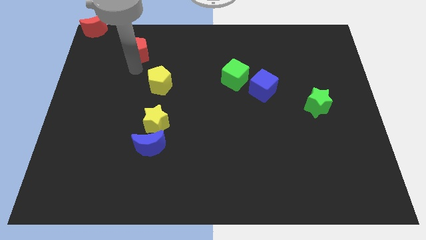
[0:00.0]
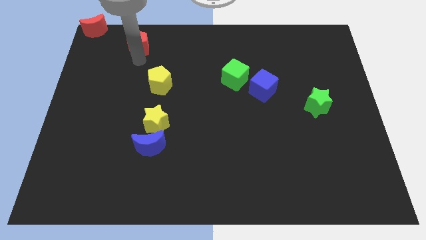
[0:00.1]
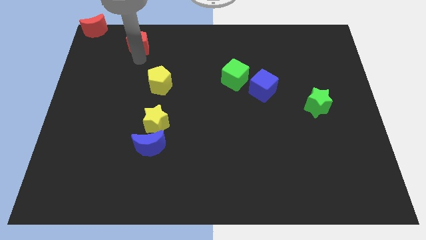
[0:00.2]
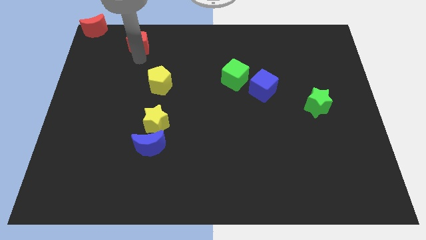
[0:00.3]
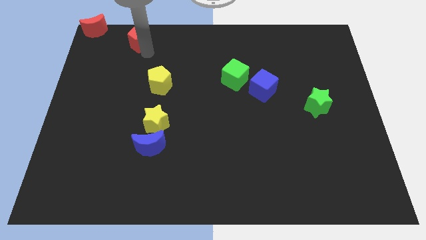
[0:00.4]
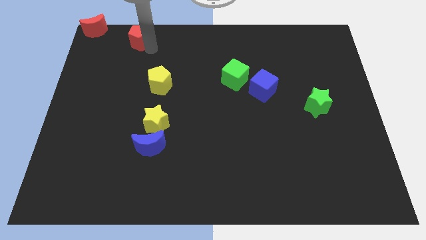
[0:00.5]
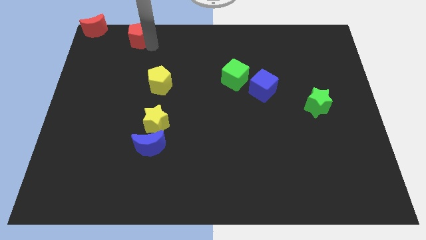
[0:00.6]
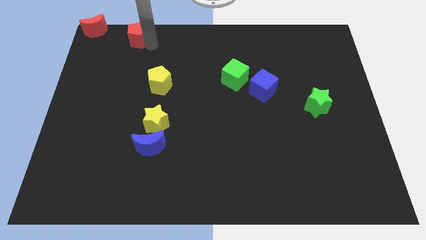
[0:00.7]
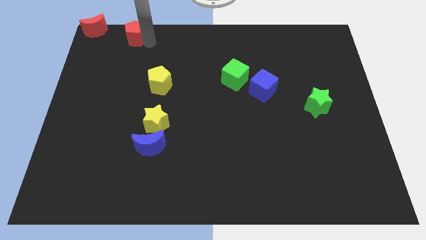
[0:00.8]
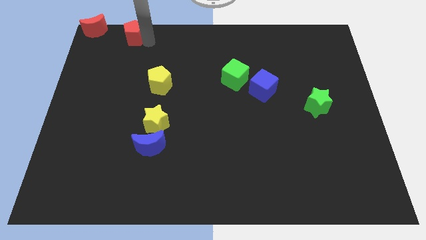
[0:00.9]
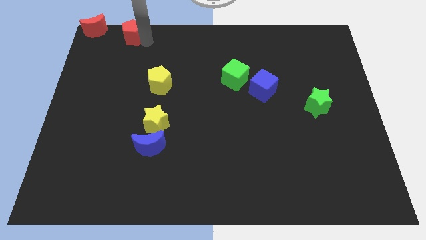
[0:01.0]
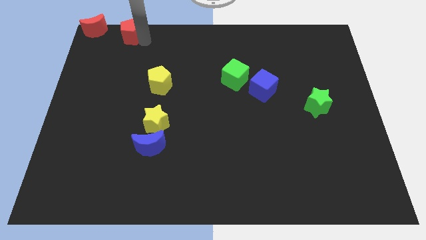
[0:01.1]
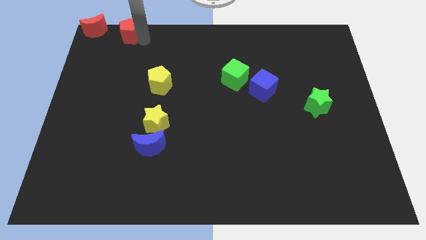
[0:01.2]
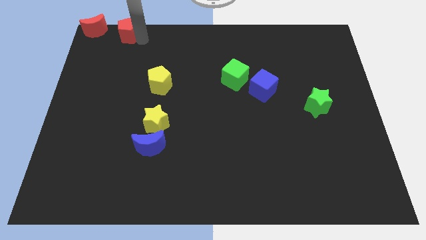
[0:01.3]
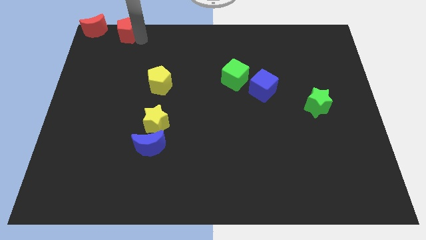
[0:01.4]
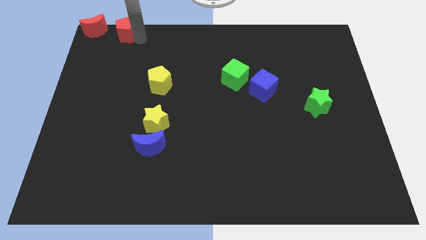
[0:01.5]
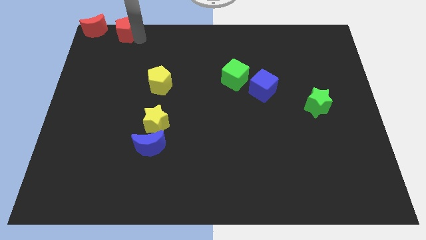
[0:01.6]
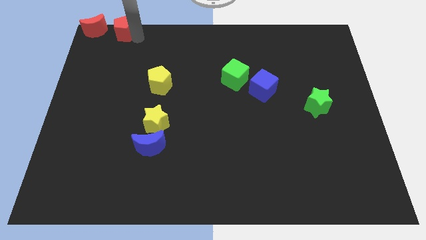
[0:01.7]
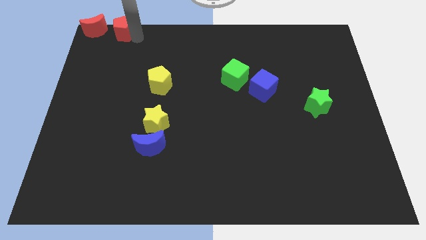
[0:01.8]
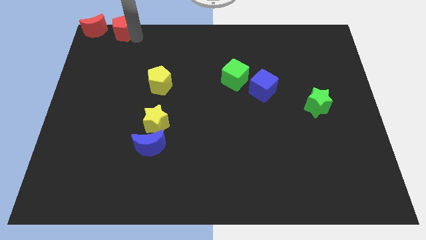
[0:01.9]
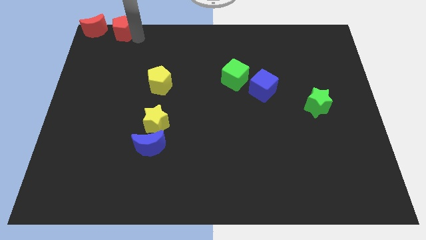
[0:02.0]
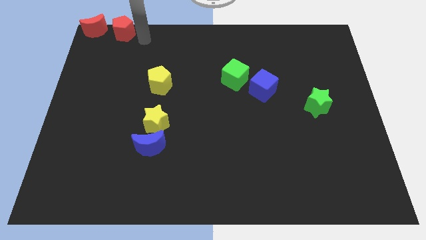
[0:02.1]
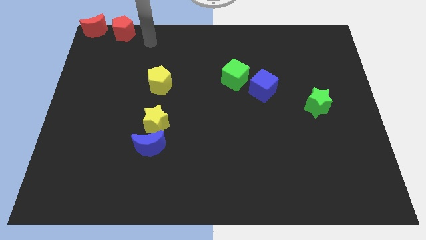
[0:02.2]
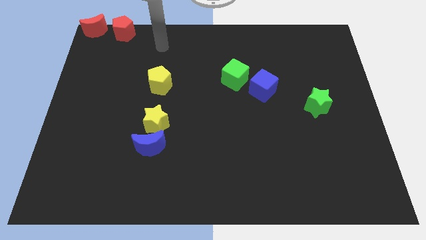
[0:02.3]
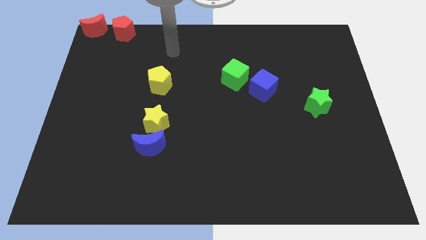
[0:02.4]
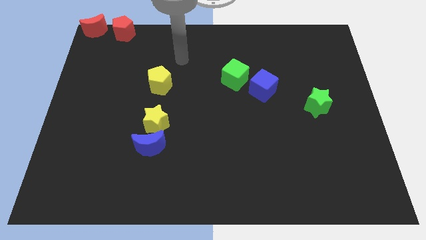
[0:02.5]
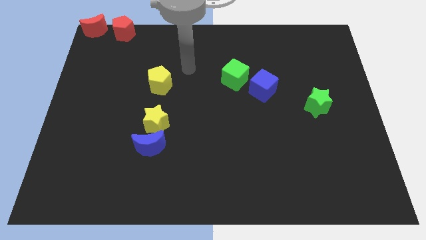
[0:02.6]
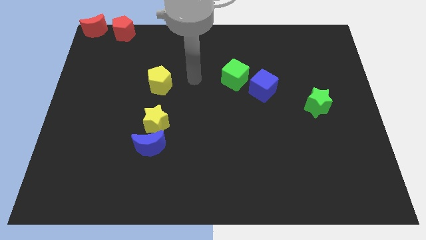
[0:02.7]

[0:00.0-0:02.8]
place the red pentagon right to the red moon

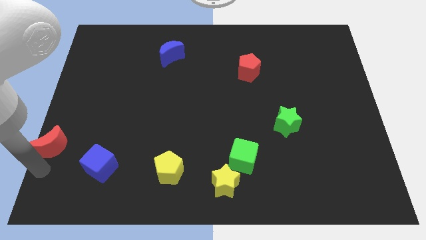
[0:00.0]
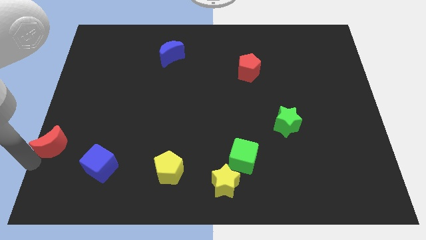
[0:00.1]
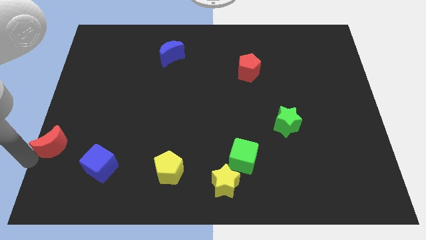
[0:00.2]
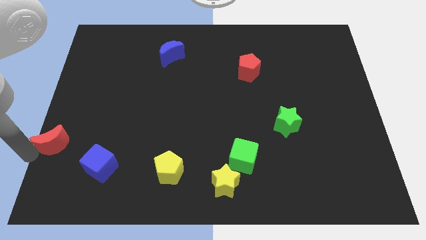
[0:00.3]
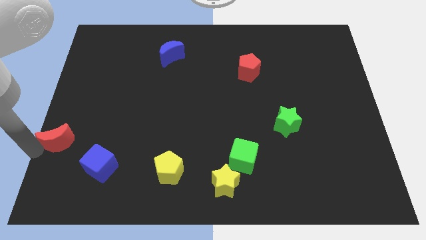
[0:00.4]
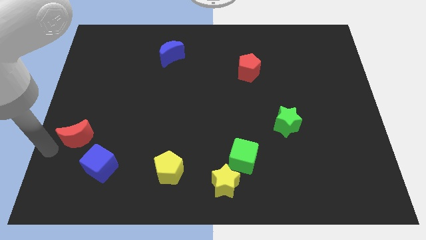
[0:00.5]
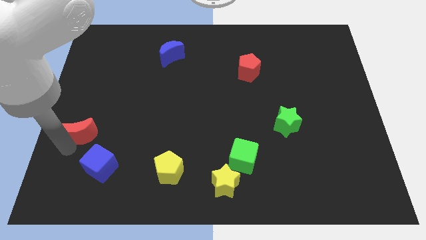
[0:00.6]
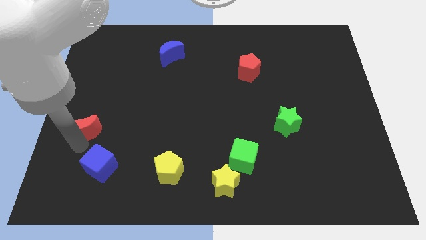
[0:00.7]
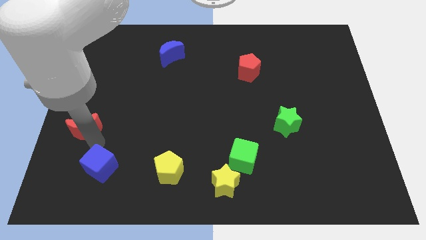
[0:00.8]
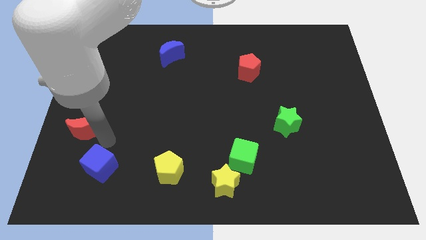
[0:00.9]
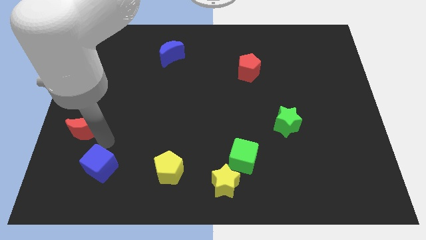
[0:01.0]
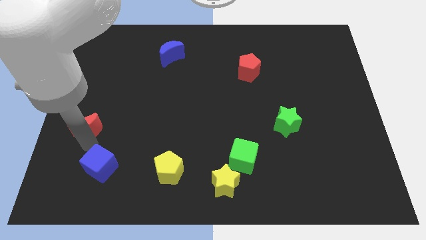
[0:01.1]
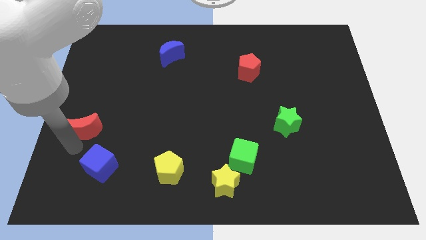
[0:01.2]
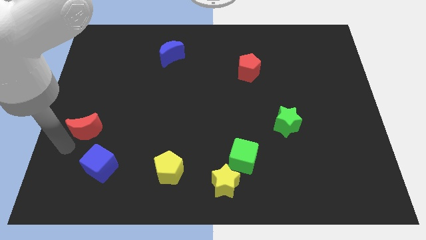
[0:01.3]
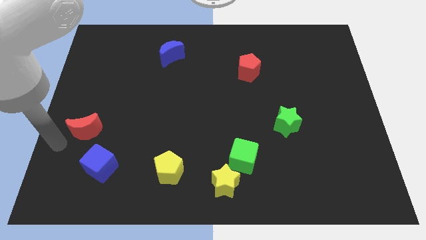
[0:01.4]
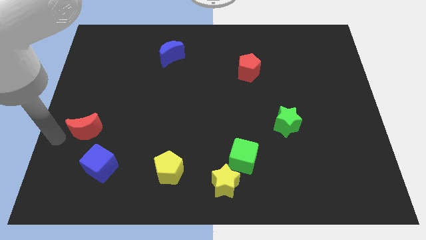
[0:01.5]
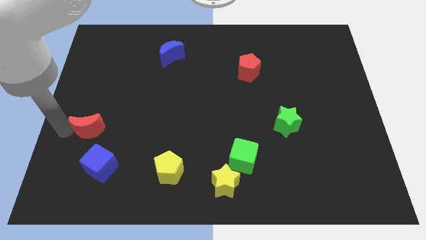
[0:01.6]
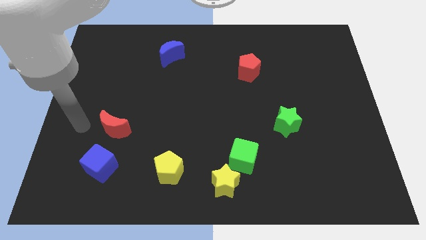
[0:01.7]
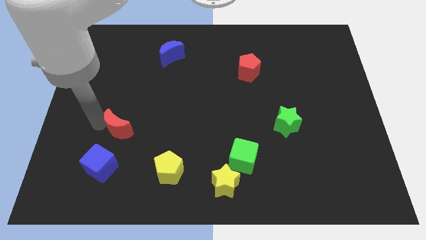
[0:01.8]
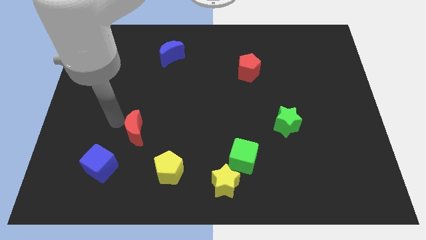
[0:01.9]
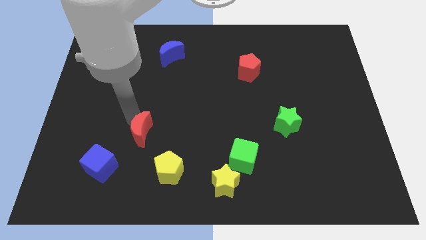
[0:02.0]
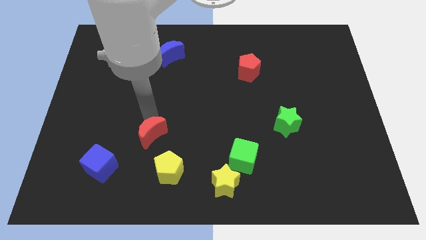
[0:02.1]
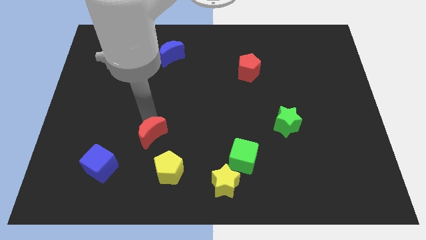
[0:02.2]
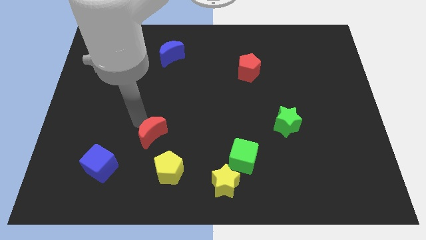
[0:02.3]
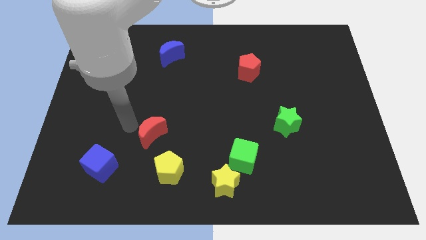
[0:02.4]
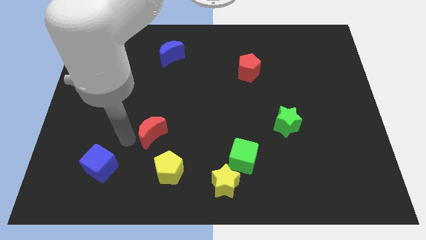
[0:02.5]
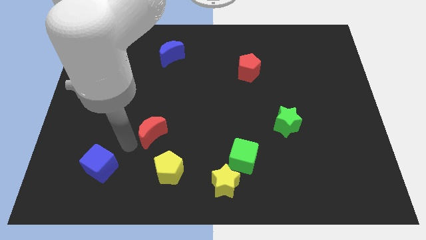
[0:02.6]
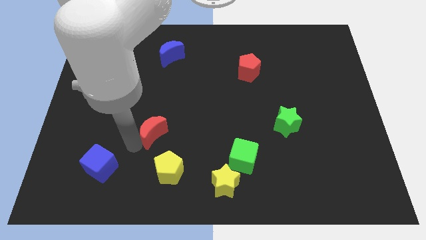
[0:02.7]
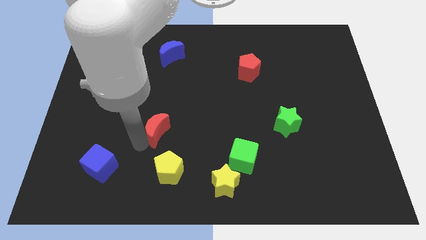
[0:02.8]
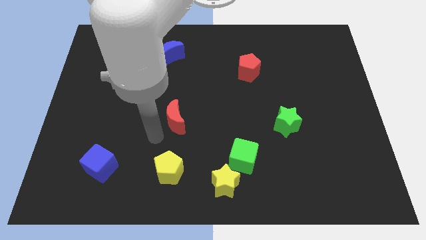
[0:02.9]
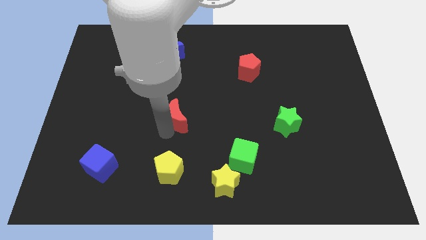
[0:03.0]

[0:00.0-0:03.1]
move the red crescent above the yellow pentagon

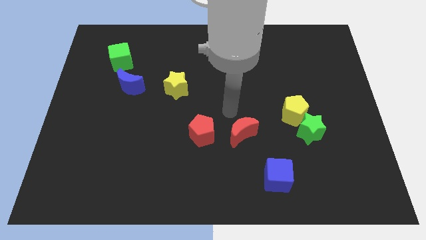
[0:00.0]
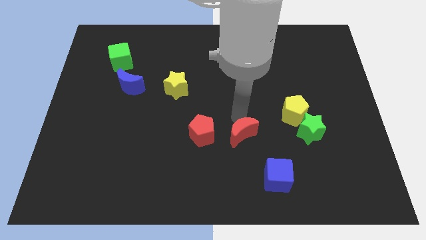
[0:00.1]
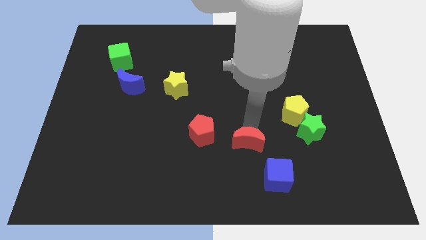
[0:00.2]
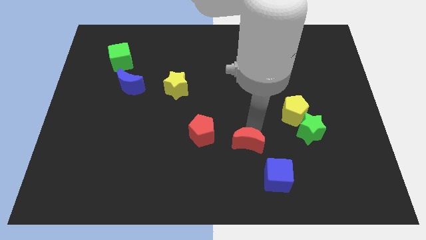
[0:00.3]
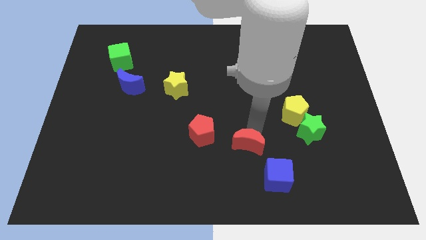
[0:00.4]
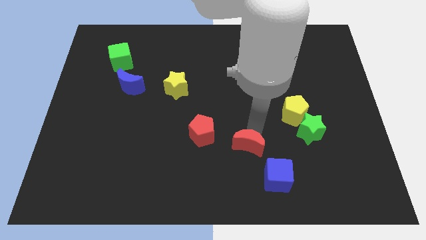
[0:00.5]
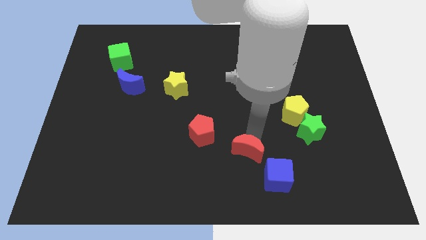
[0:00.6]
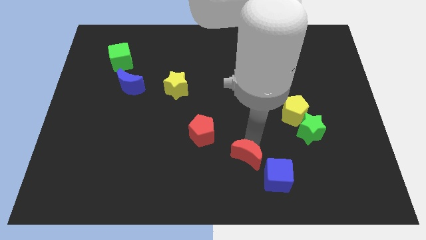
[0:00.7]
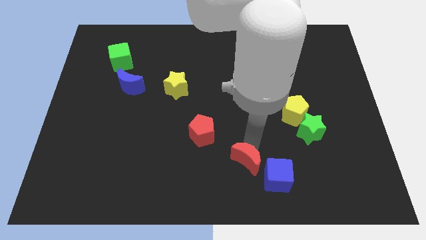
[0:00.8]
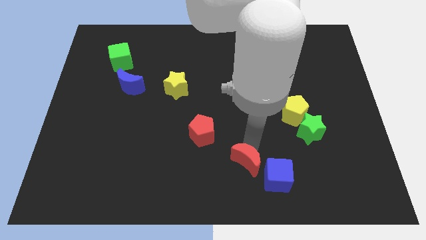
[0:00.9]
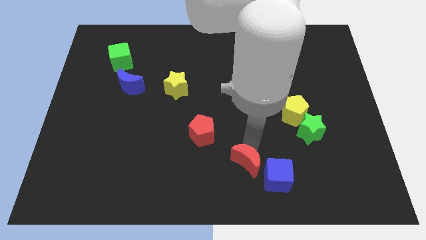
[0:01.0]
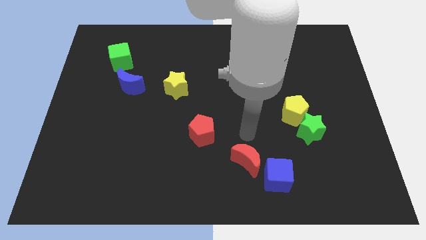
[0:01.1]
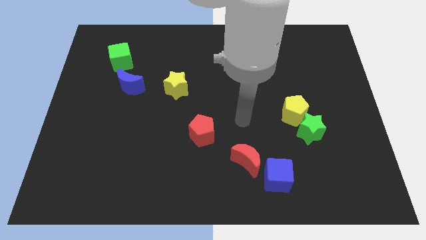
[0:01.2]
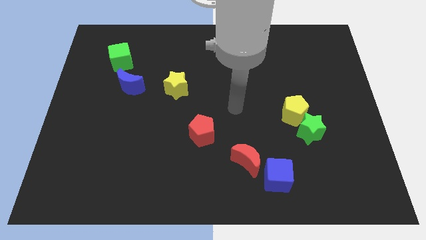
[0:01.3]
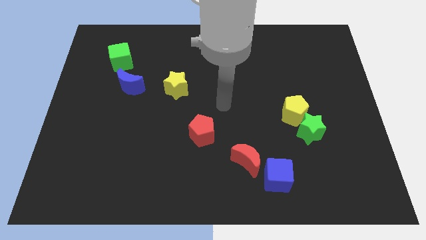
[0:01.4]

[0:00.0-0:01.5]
place the red crescent to the left of the blue cube

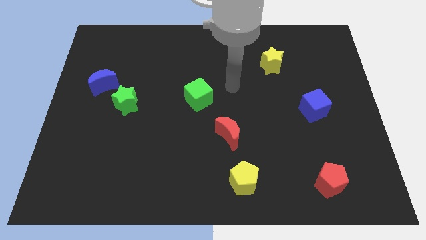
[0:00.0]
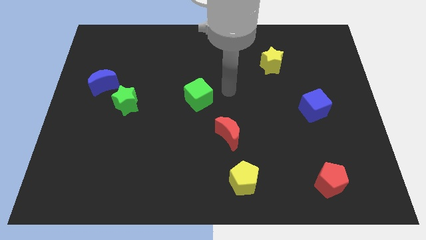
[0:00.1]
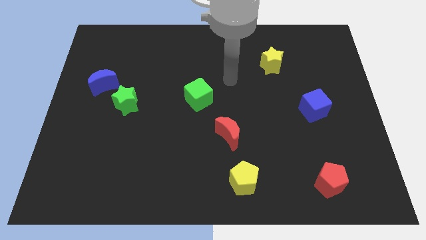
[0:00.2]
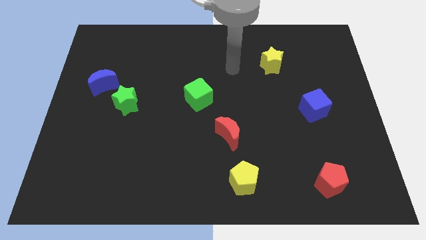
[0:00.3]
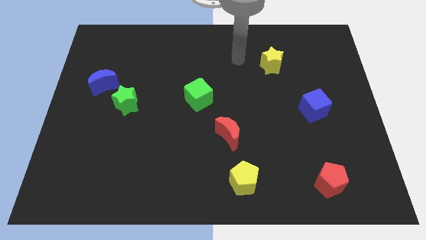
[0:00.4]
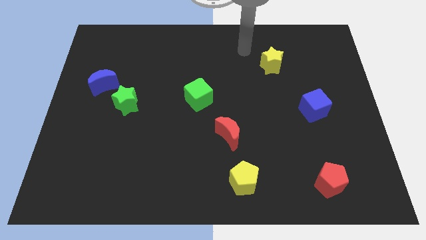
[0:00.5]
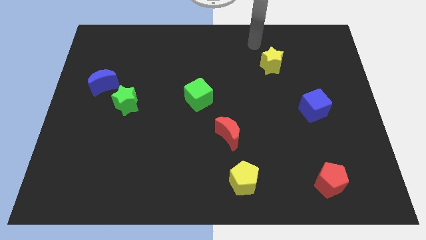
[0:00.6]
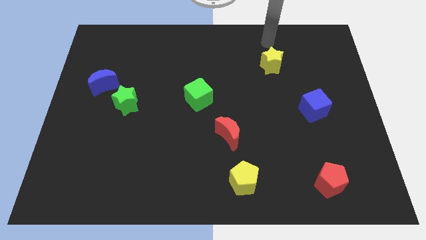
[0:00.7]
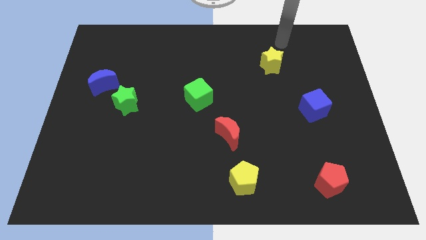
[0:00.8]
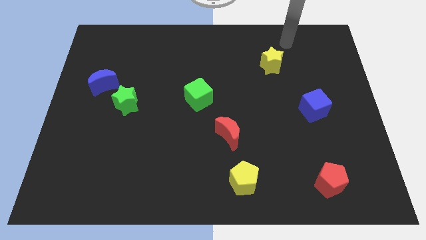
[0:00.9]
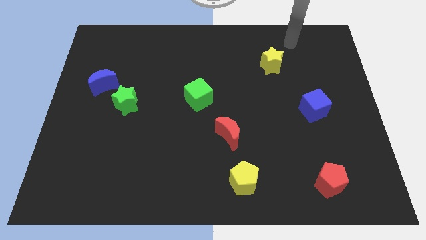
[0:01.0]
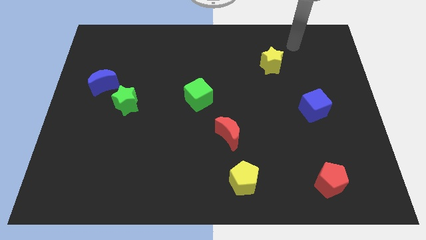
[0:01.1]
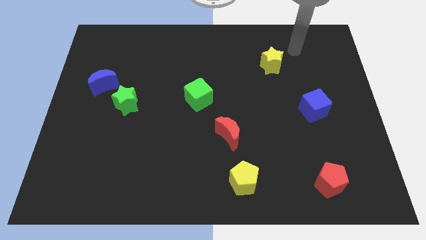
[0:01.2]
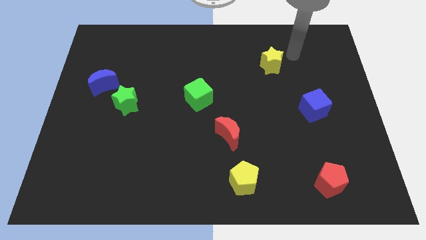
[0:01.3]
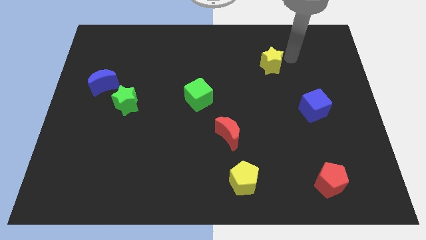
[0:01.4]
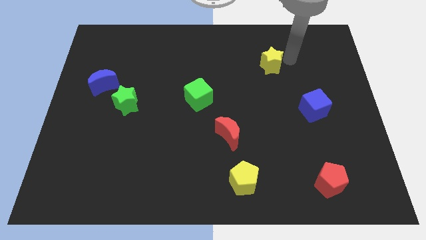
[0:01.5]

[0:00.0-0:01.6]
move your arm to the right of yellow star
